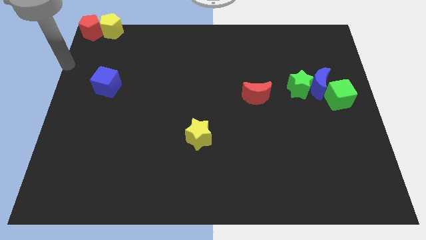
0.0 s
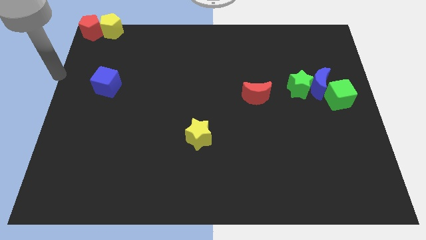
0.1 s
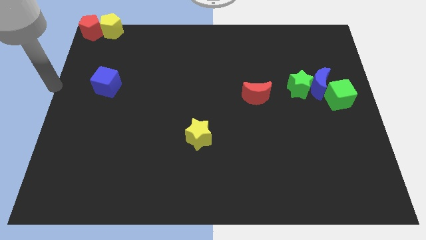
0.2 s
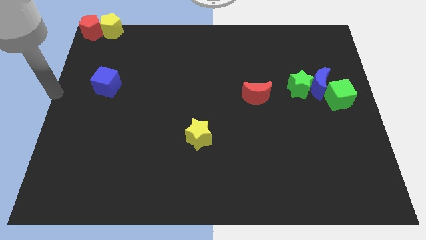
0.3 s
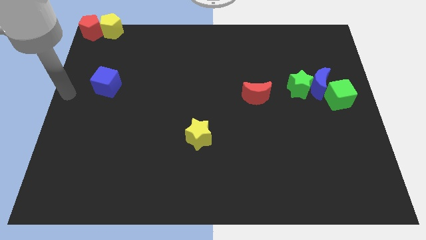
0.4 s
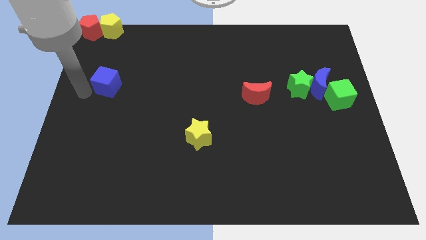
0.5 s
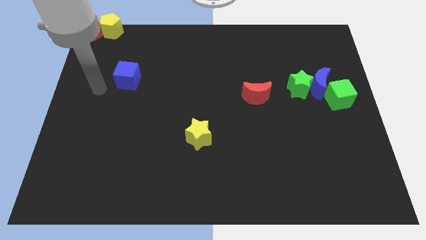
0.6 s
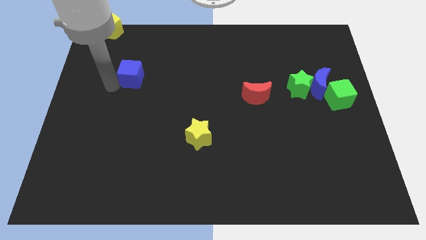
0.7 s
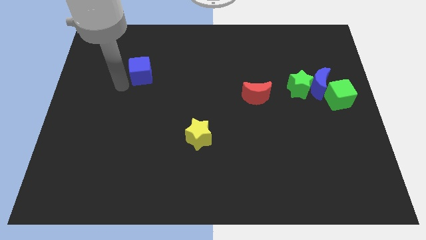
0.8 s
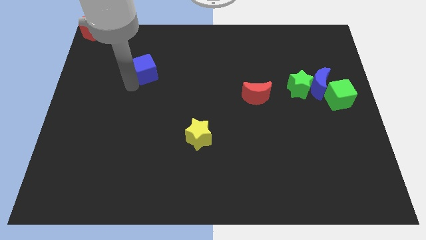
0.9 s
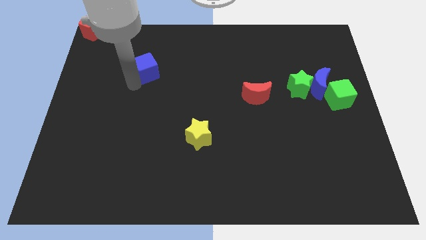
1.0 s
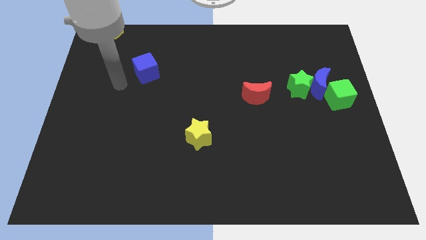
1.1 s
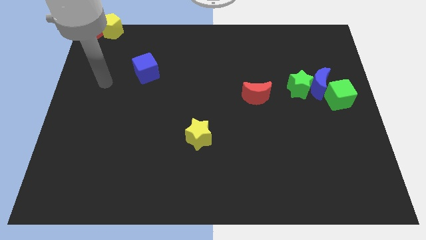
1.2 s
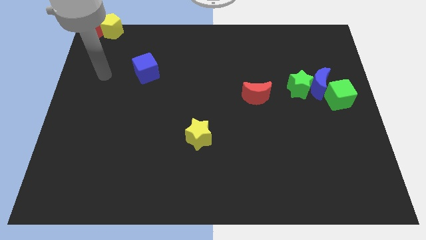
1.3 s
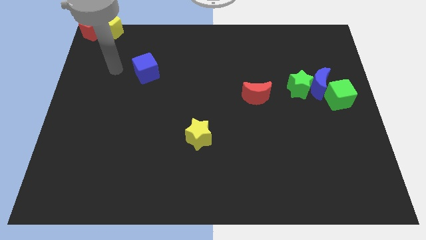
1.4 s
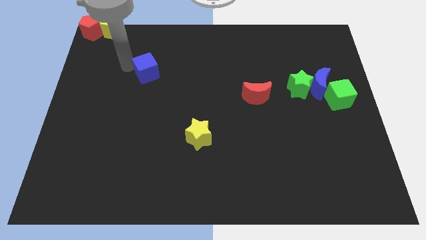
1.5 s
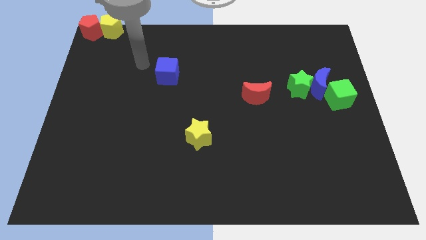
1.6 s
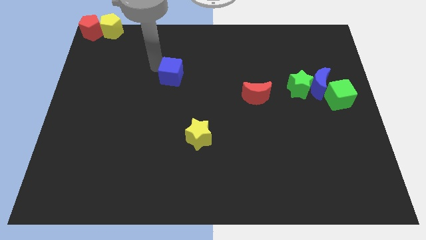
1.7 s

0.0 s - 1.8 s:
slide the blue cube diagonally bottom right to the yellow pentagon

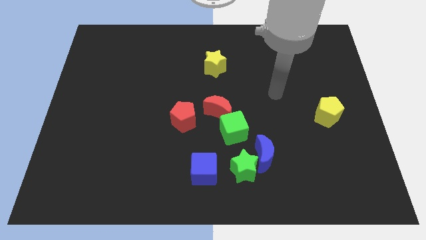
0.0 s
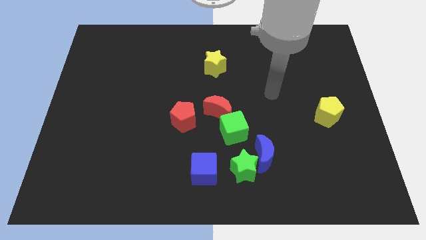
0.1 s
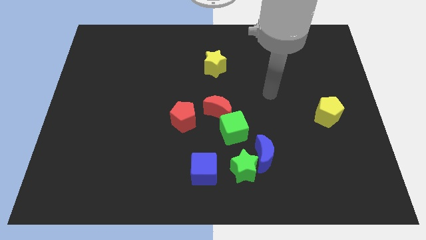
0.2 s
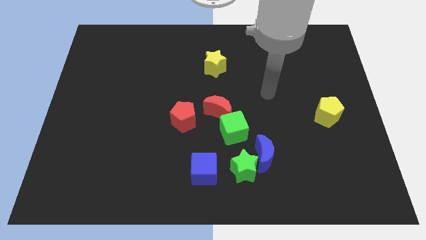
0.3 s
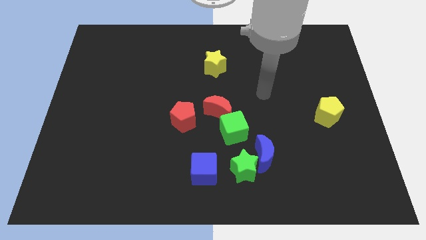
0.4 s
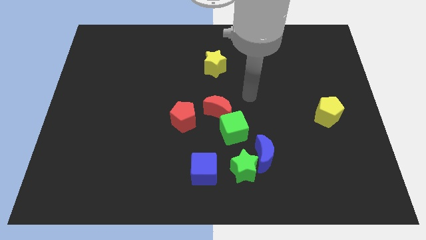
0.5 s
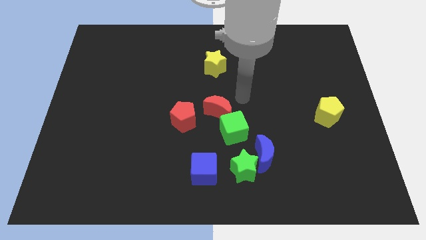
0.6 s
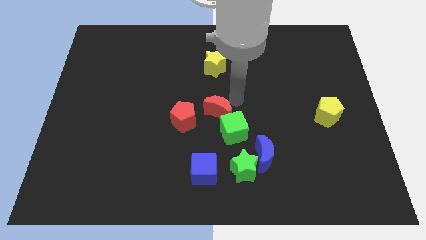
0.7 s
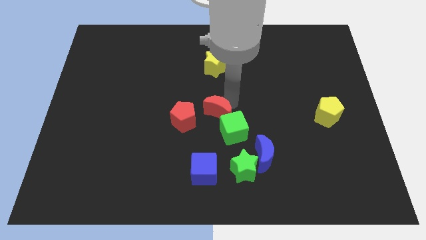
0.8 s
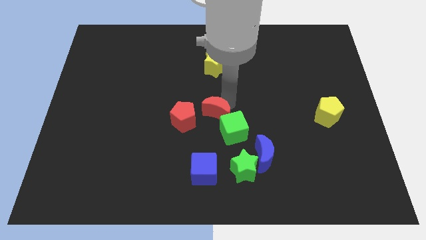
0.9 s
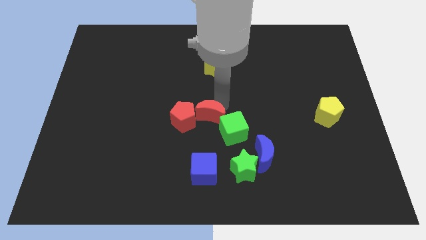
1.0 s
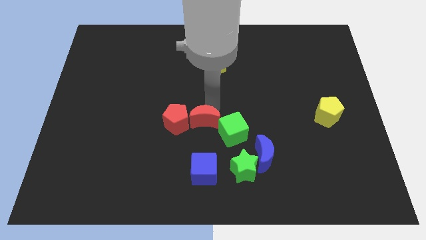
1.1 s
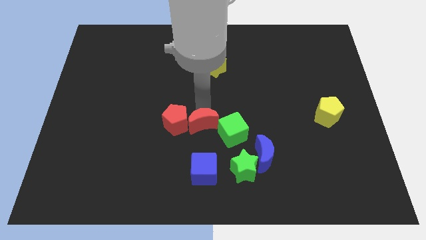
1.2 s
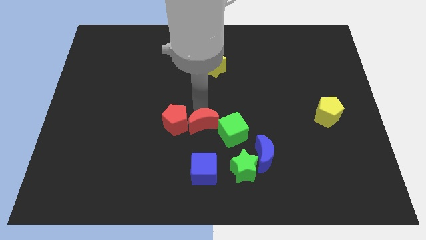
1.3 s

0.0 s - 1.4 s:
slide red moon in between the red pentagon and green cube

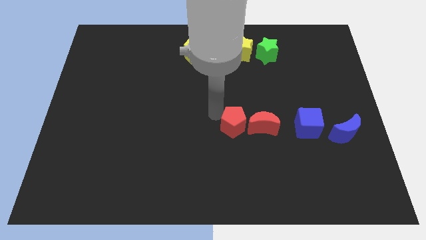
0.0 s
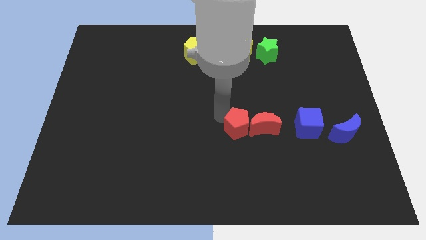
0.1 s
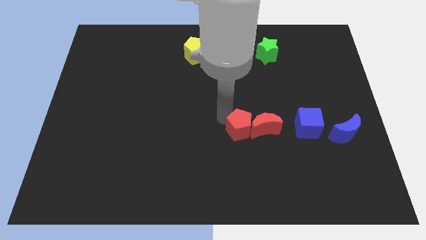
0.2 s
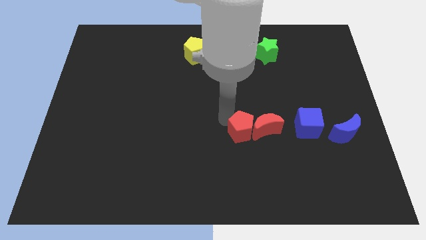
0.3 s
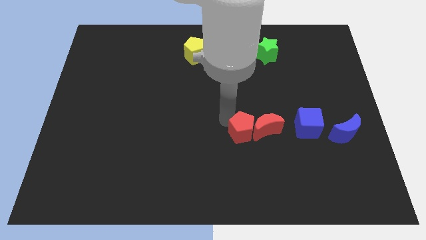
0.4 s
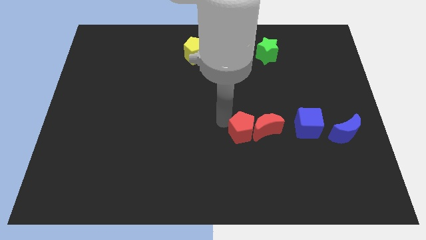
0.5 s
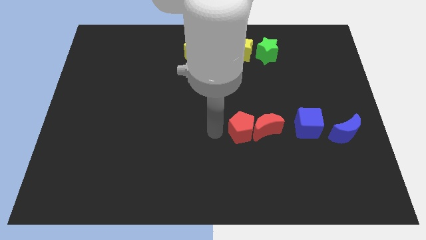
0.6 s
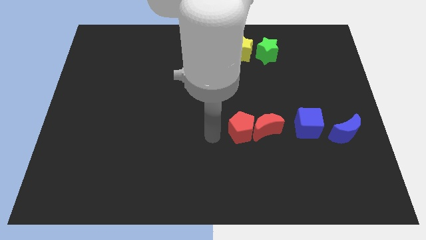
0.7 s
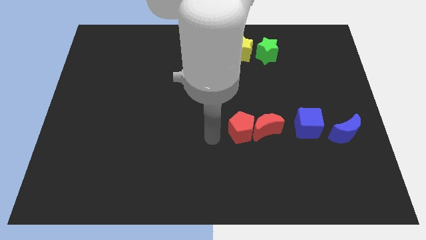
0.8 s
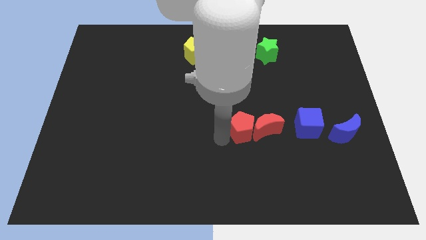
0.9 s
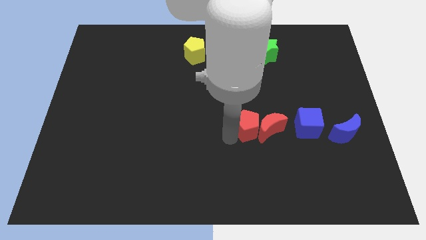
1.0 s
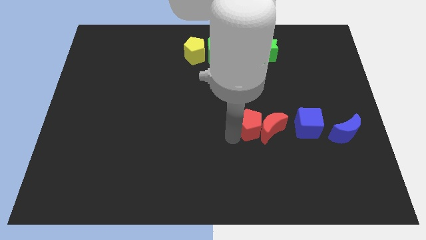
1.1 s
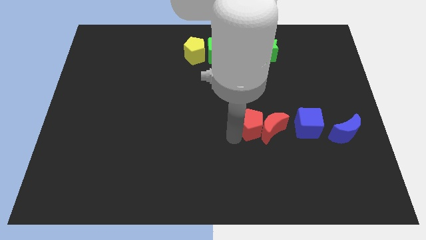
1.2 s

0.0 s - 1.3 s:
move the red pentagon into the red moon

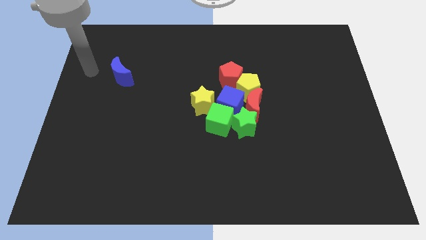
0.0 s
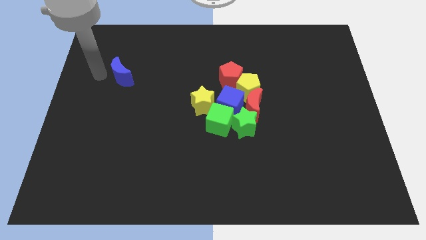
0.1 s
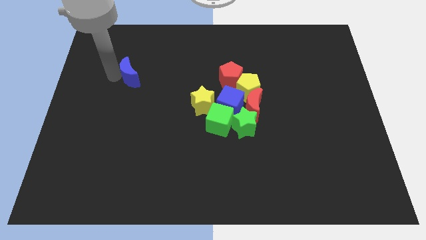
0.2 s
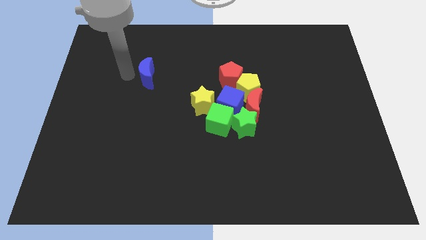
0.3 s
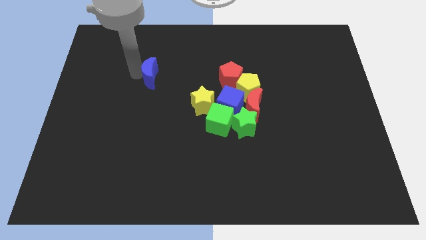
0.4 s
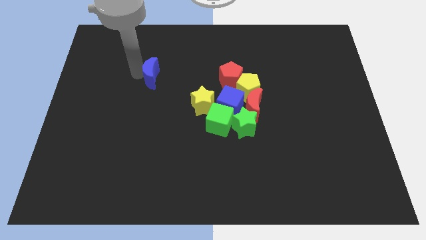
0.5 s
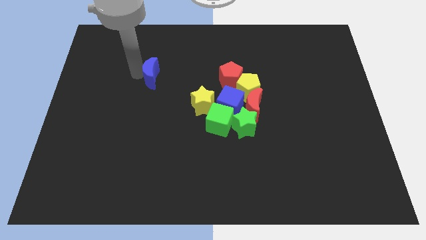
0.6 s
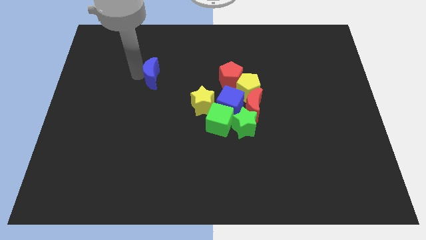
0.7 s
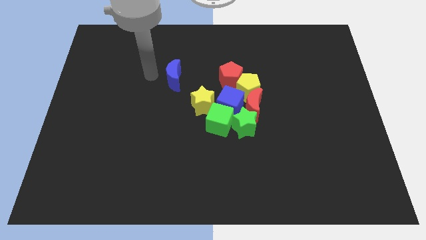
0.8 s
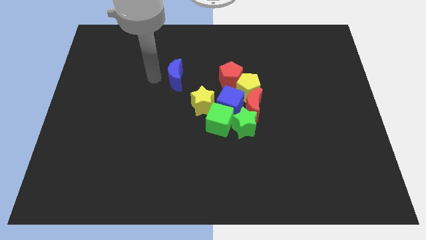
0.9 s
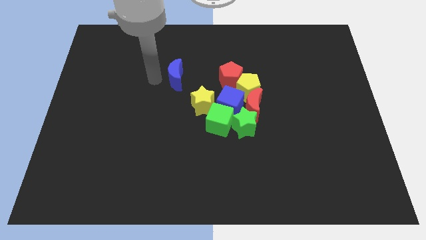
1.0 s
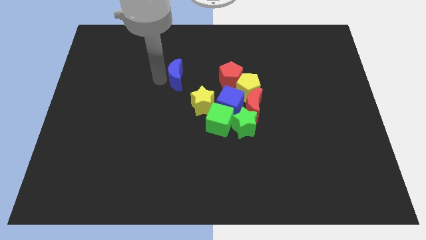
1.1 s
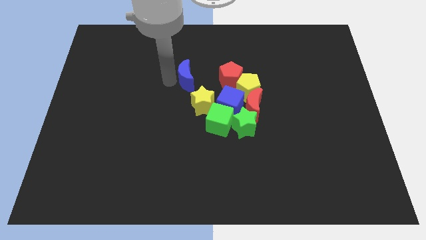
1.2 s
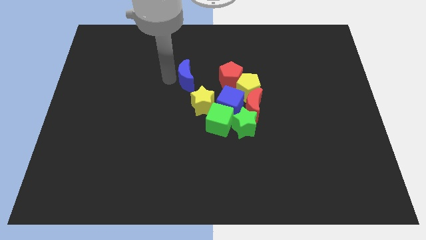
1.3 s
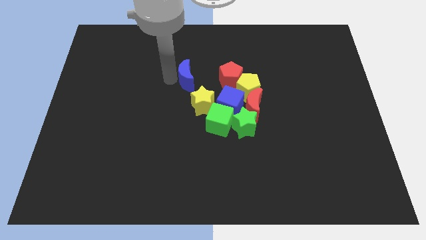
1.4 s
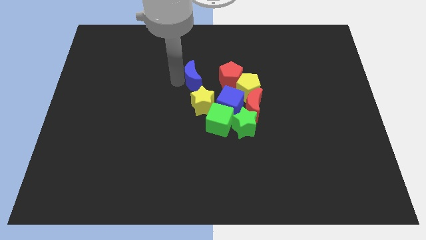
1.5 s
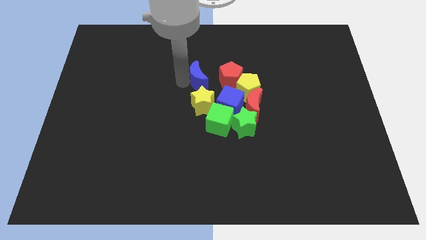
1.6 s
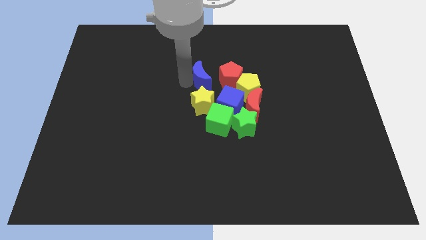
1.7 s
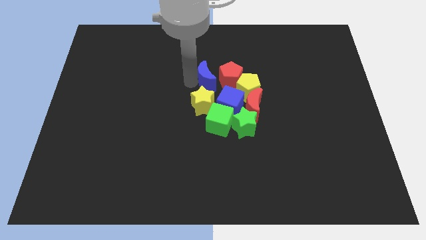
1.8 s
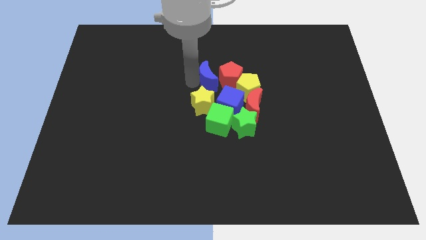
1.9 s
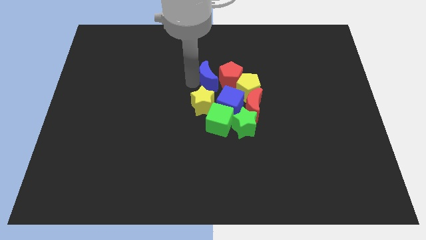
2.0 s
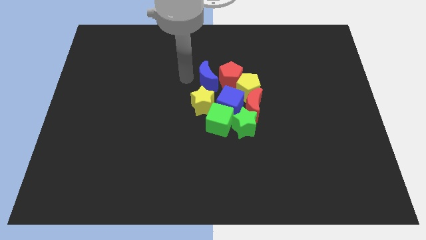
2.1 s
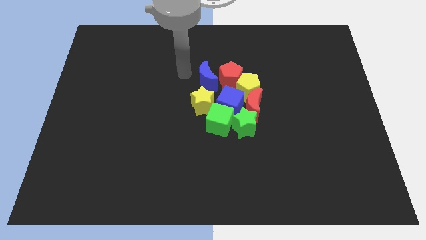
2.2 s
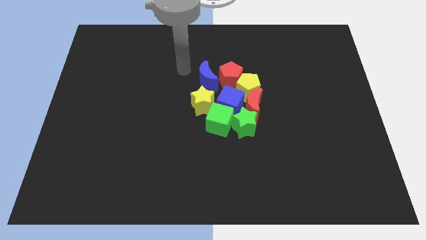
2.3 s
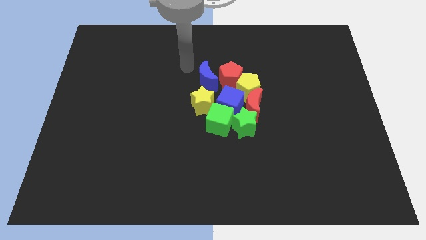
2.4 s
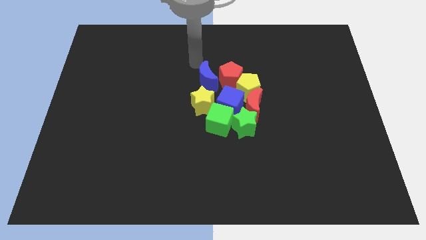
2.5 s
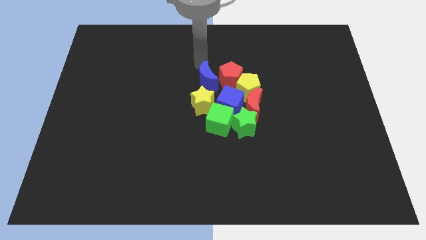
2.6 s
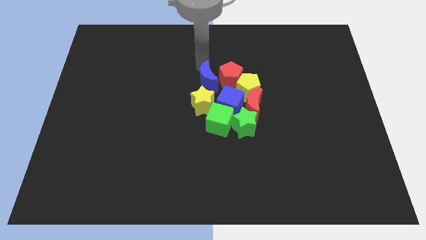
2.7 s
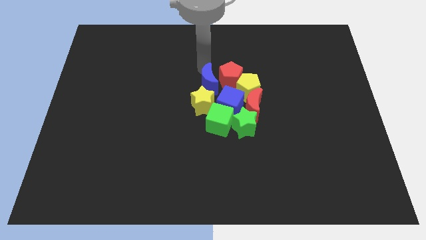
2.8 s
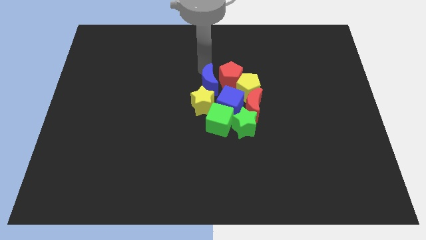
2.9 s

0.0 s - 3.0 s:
place blue crescent beside yellow star to the center of the board

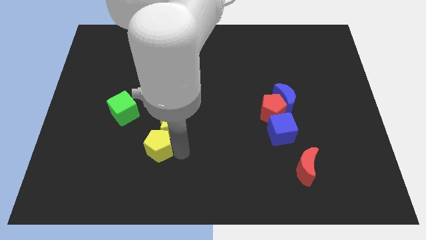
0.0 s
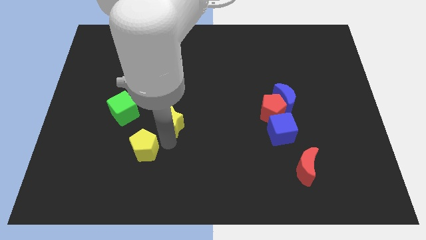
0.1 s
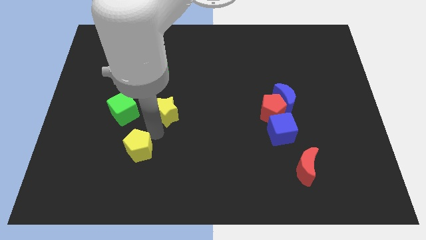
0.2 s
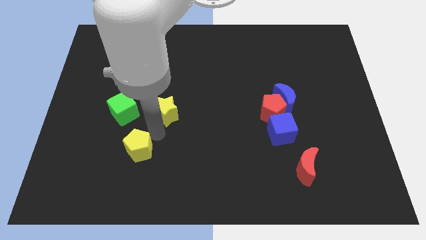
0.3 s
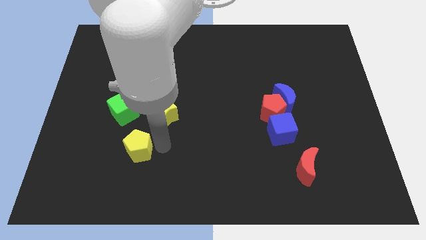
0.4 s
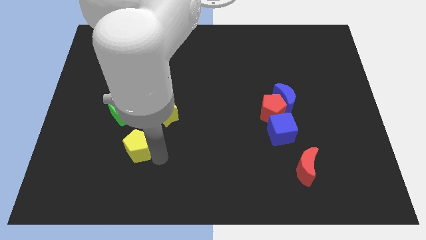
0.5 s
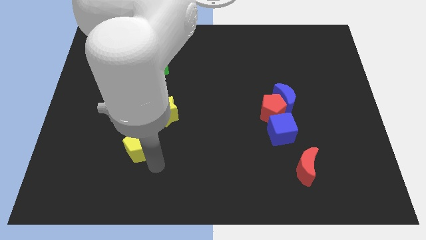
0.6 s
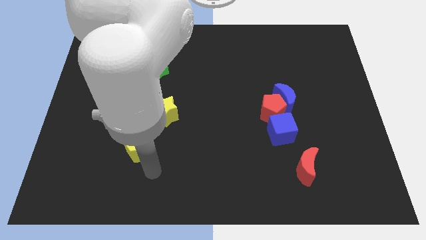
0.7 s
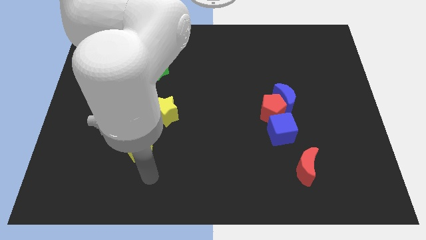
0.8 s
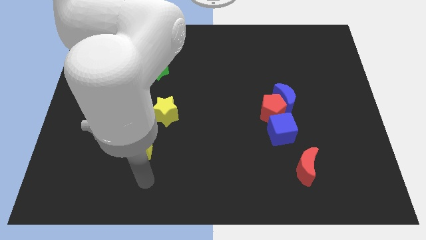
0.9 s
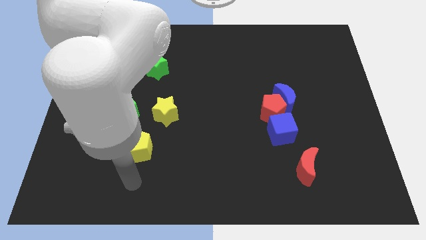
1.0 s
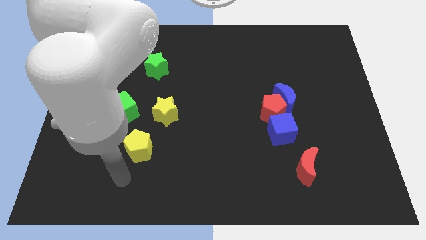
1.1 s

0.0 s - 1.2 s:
separate both the yellow blocks

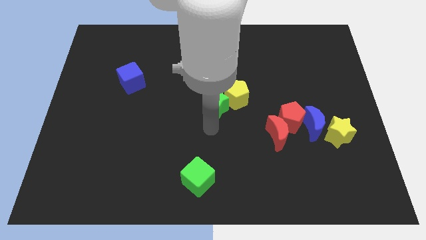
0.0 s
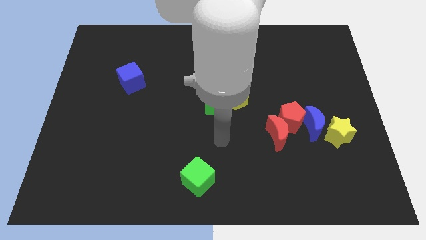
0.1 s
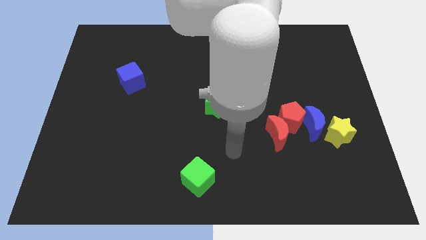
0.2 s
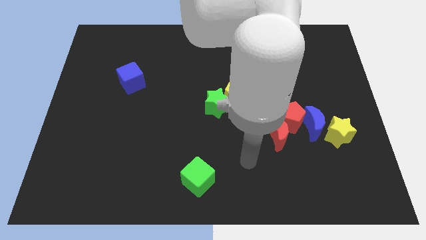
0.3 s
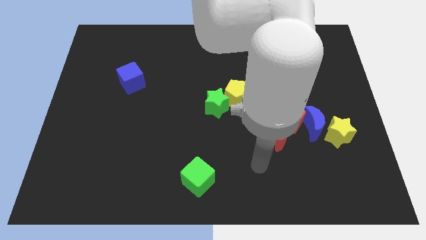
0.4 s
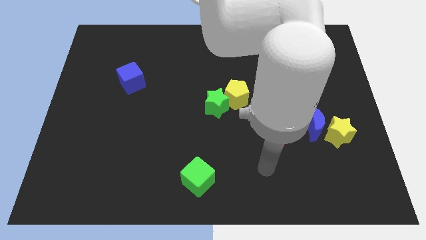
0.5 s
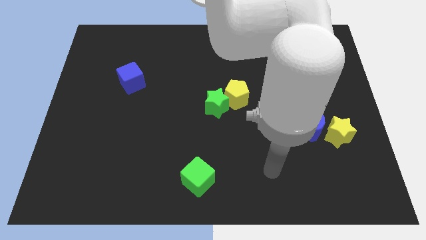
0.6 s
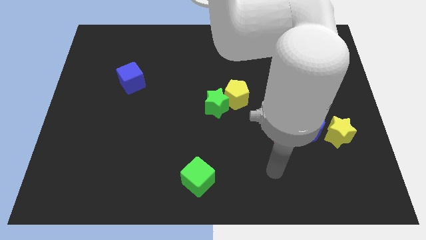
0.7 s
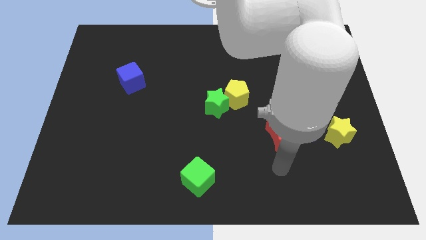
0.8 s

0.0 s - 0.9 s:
point your arm at the bottom of the red crescent
